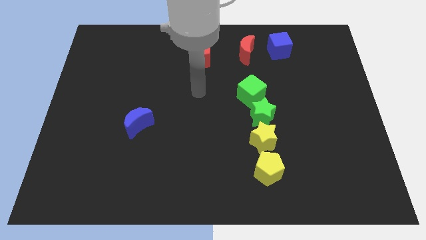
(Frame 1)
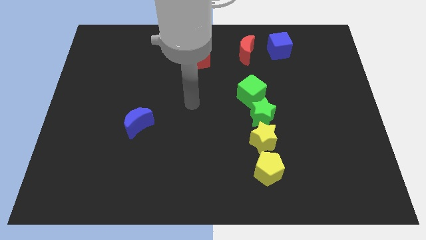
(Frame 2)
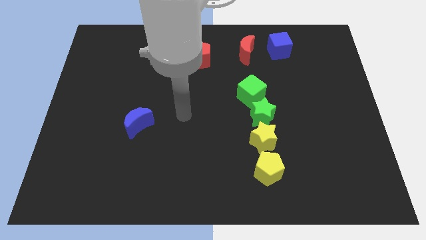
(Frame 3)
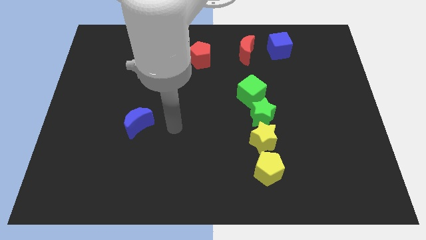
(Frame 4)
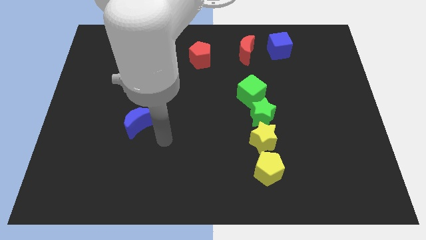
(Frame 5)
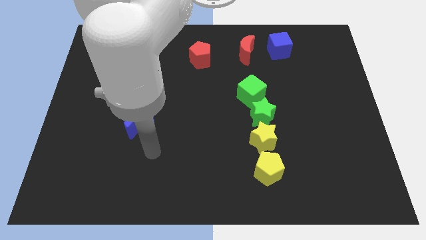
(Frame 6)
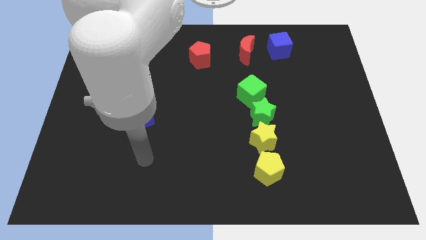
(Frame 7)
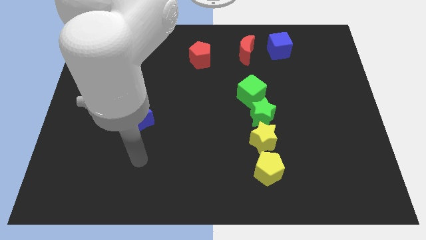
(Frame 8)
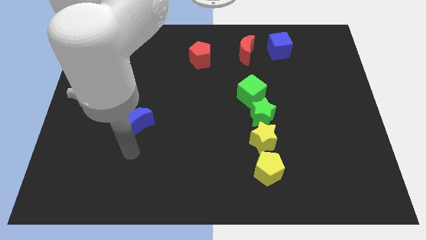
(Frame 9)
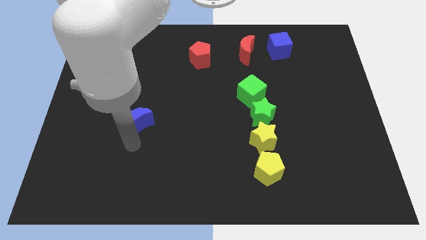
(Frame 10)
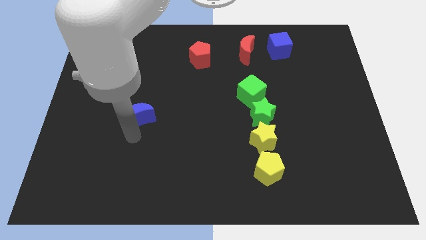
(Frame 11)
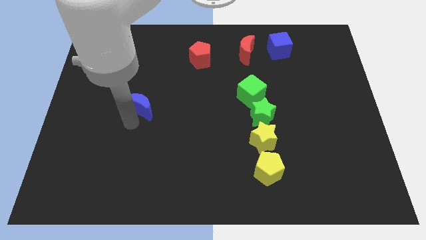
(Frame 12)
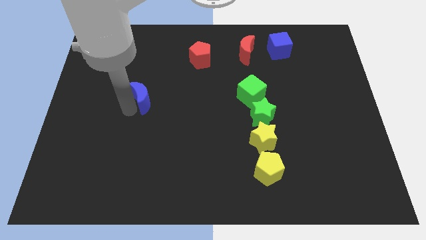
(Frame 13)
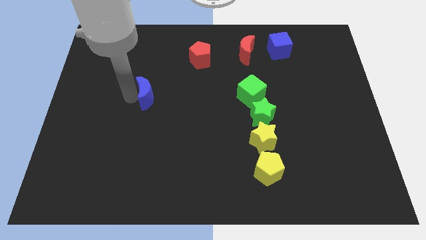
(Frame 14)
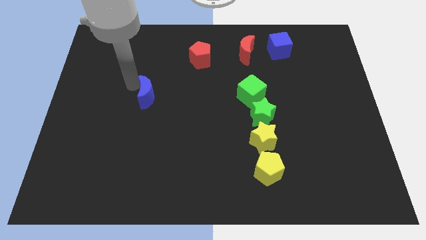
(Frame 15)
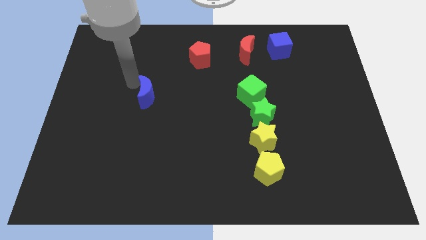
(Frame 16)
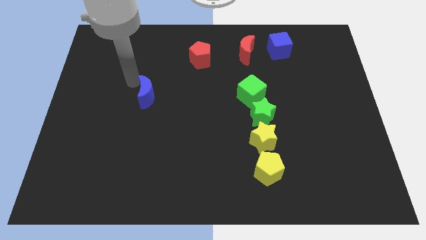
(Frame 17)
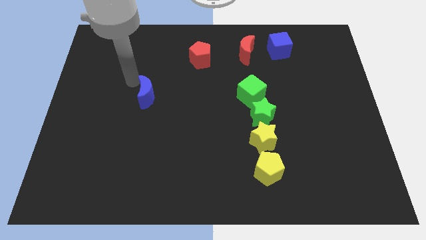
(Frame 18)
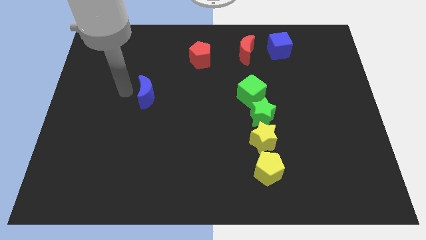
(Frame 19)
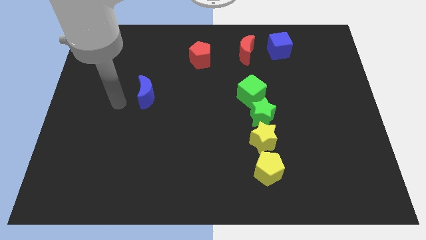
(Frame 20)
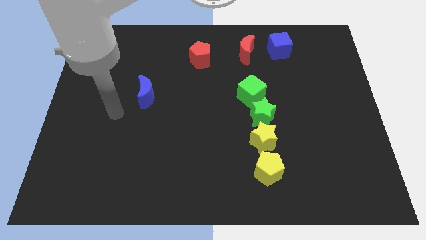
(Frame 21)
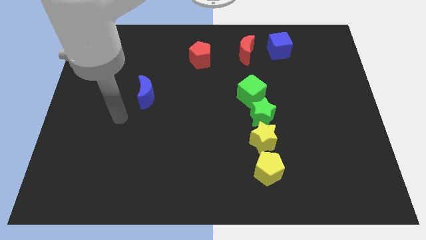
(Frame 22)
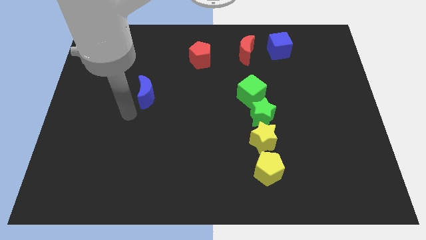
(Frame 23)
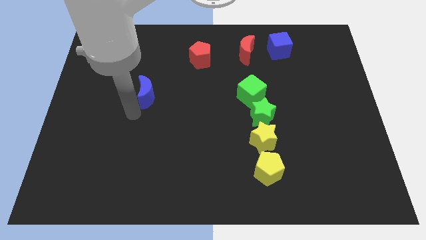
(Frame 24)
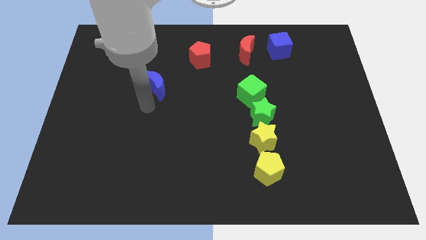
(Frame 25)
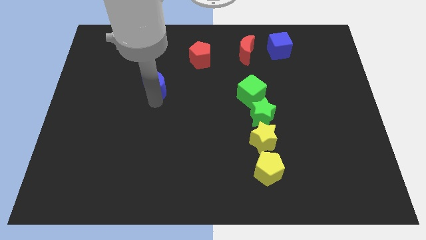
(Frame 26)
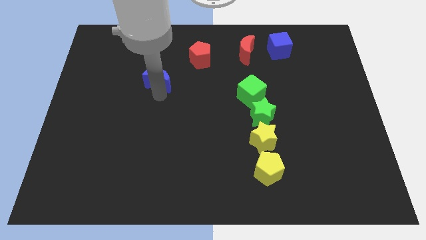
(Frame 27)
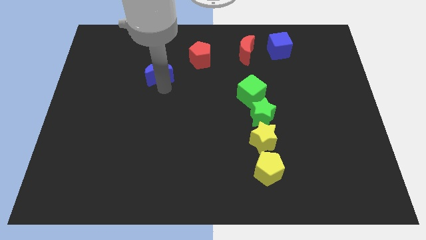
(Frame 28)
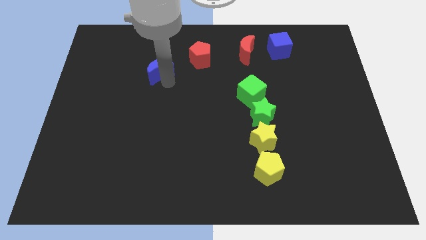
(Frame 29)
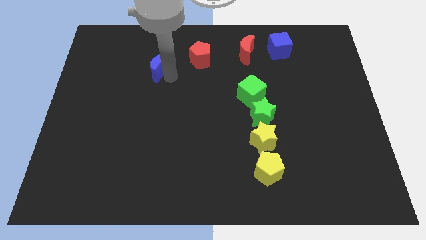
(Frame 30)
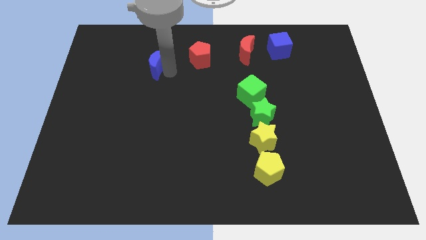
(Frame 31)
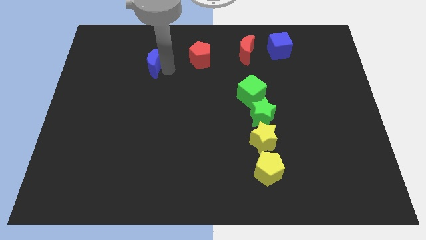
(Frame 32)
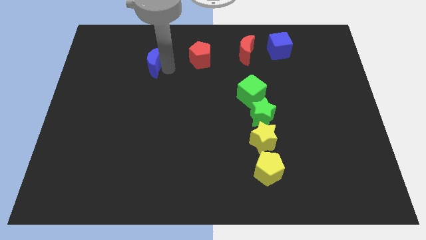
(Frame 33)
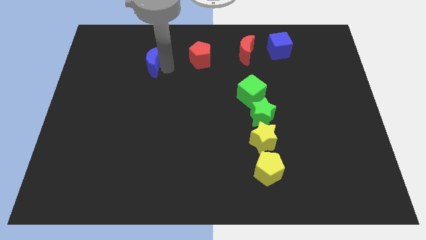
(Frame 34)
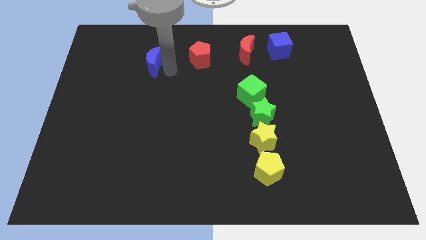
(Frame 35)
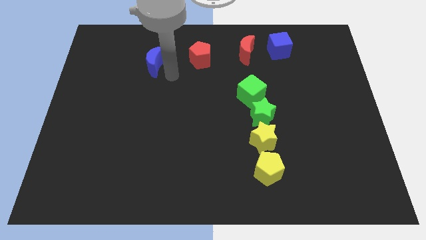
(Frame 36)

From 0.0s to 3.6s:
bring the blue moon at the left side of the red pentagon

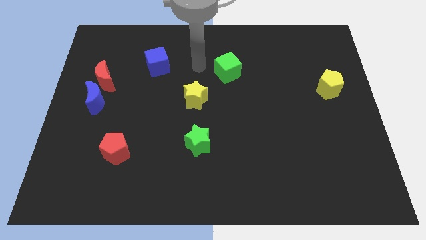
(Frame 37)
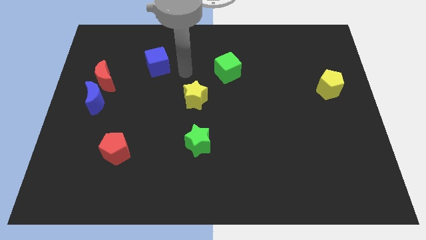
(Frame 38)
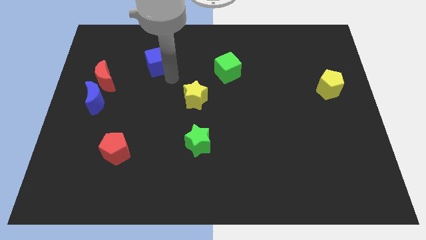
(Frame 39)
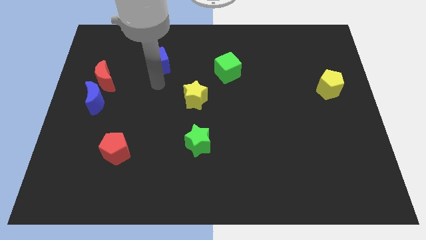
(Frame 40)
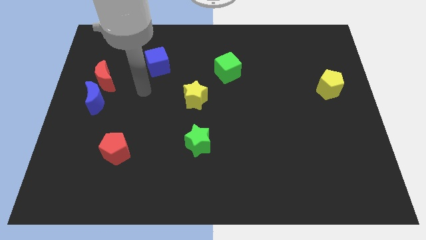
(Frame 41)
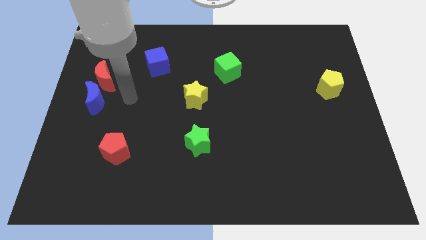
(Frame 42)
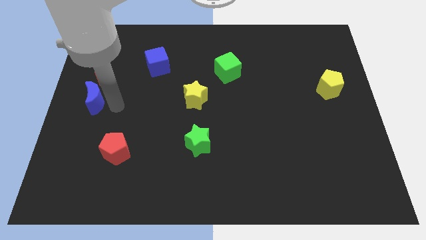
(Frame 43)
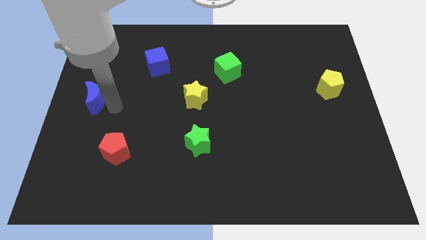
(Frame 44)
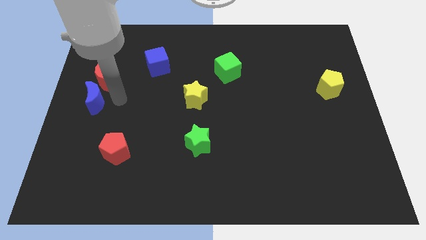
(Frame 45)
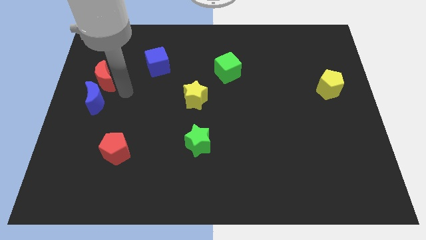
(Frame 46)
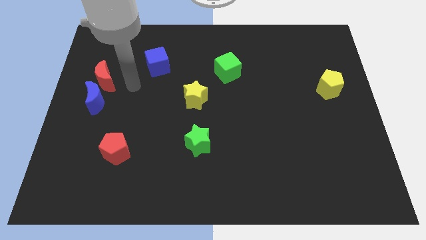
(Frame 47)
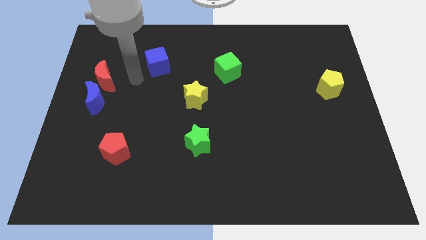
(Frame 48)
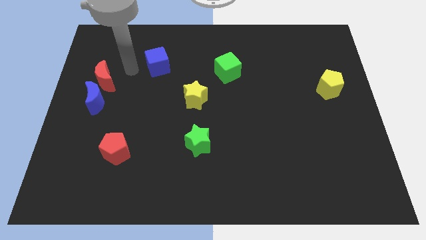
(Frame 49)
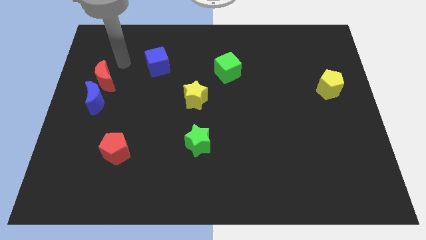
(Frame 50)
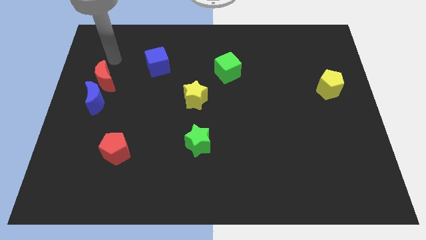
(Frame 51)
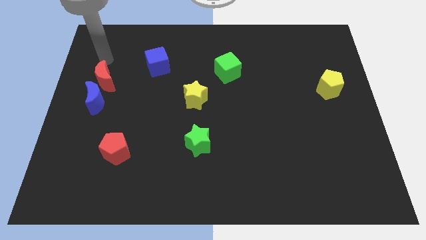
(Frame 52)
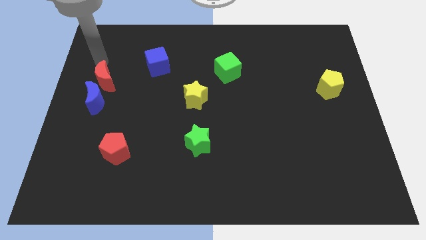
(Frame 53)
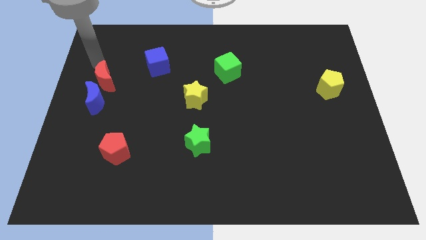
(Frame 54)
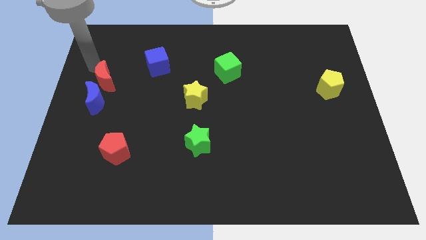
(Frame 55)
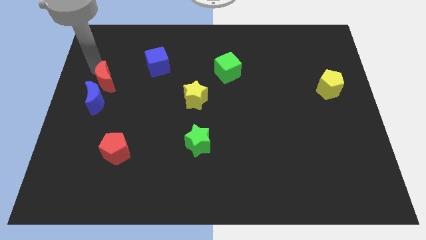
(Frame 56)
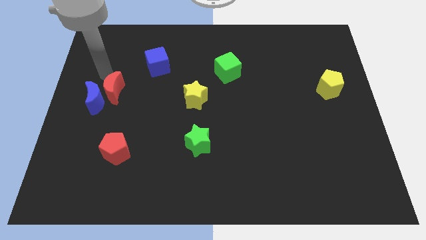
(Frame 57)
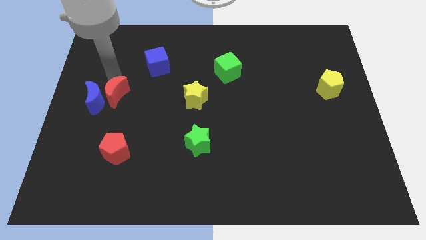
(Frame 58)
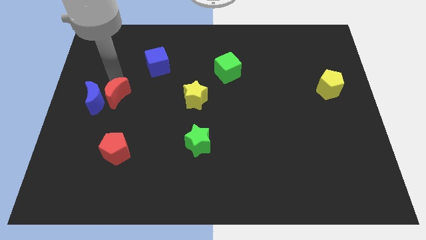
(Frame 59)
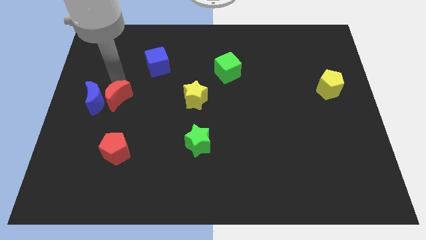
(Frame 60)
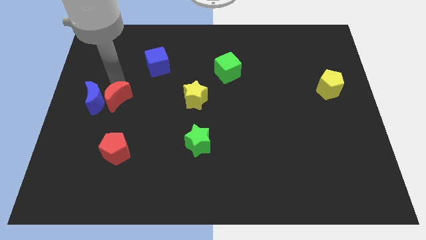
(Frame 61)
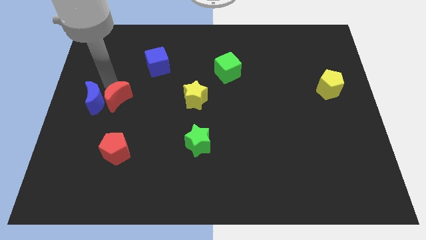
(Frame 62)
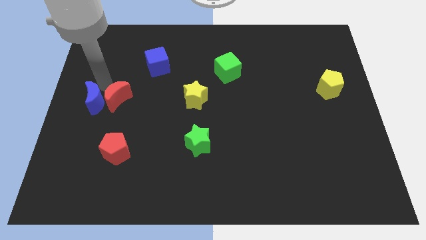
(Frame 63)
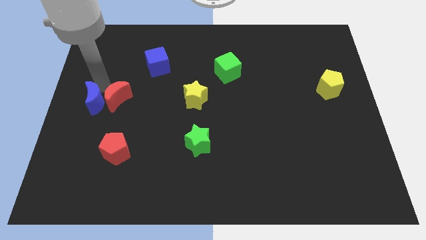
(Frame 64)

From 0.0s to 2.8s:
move the red pentagon to the right of the blue crescent

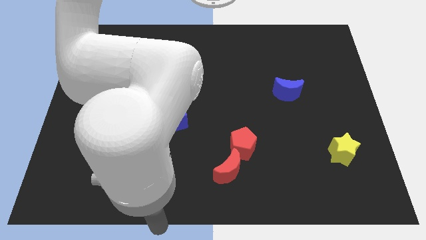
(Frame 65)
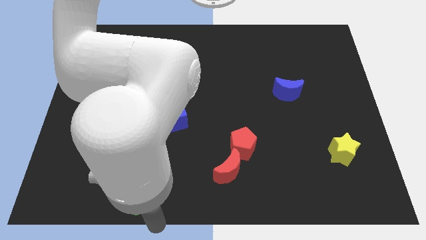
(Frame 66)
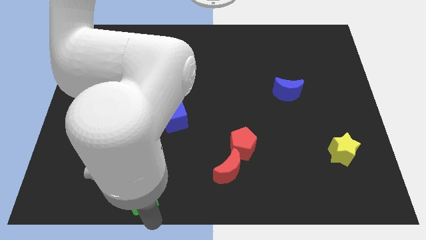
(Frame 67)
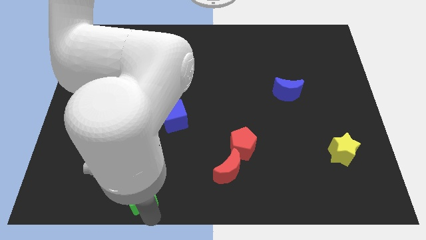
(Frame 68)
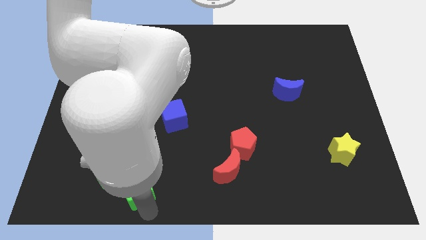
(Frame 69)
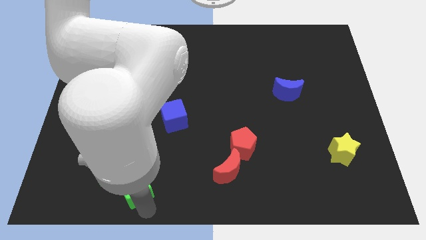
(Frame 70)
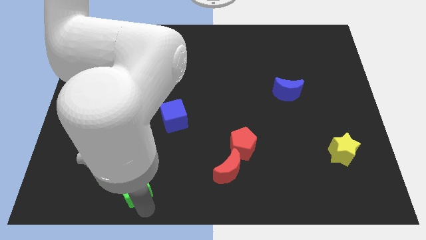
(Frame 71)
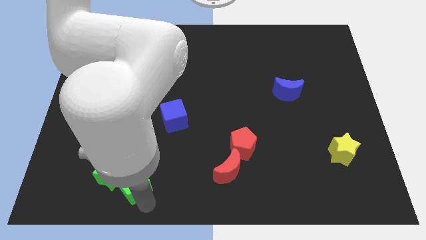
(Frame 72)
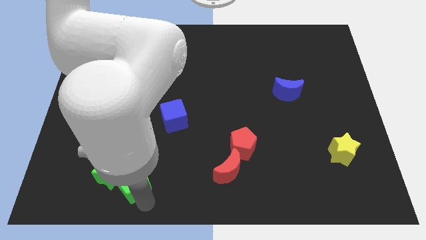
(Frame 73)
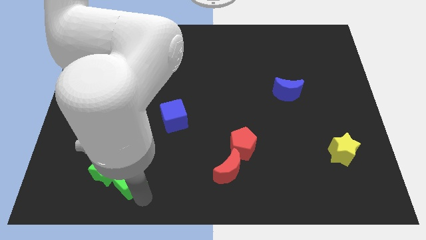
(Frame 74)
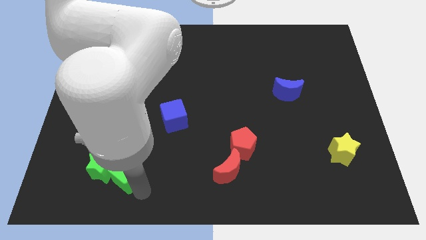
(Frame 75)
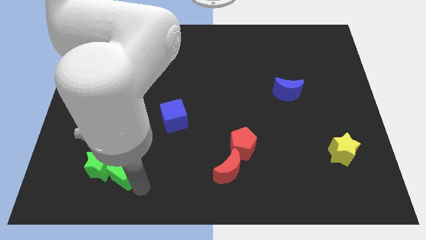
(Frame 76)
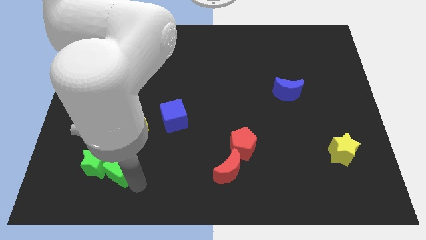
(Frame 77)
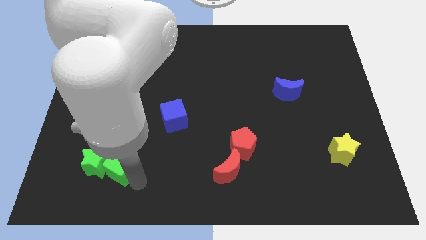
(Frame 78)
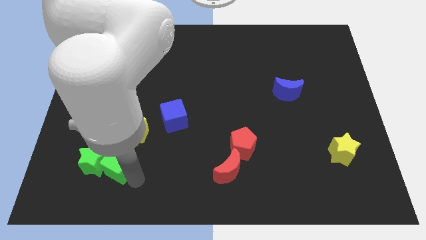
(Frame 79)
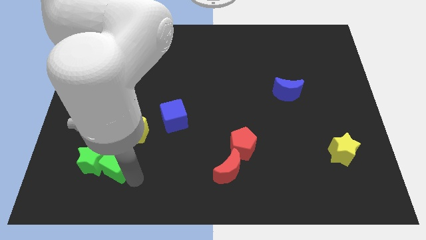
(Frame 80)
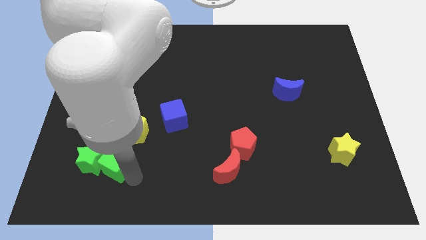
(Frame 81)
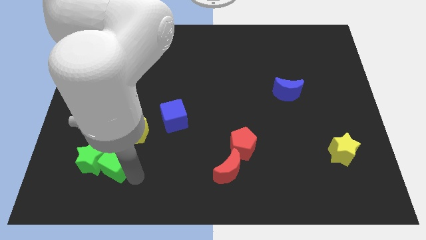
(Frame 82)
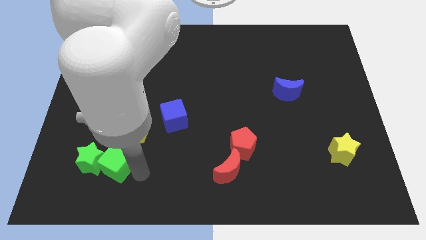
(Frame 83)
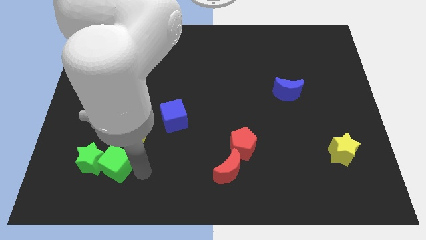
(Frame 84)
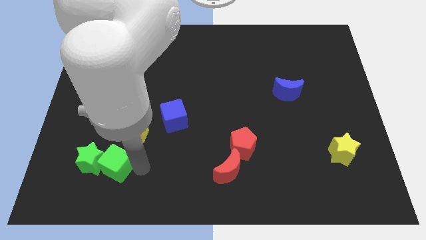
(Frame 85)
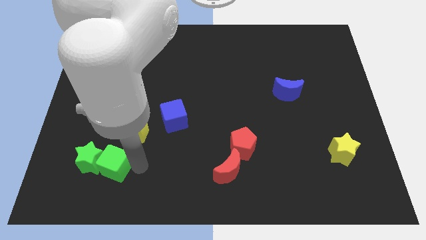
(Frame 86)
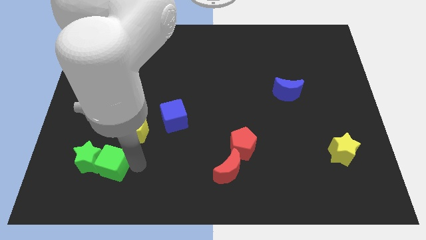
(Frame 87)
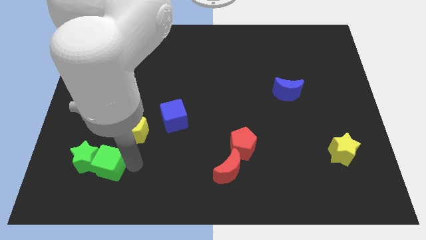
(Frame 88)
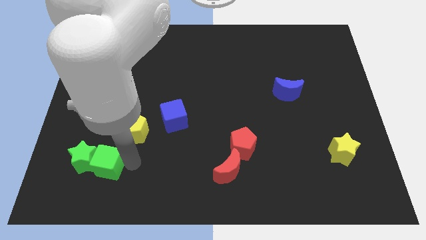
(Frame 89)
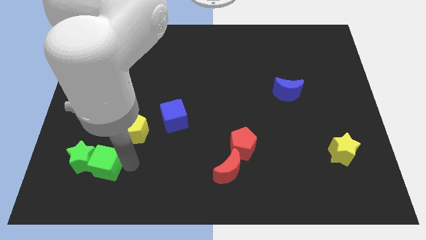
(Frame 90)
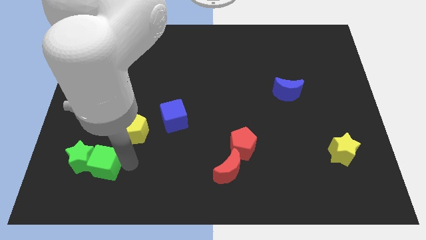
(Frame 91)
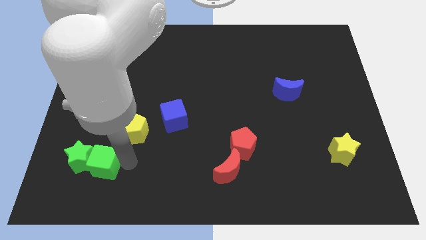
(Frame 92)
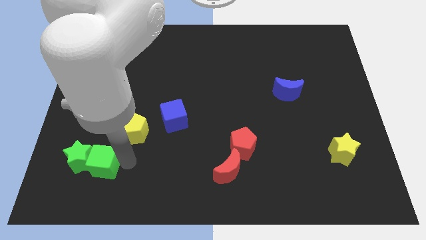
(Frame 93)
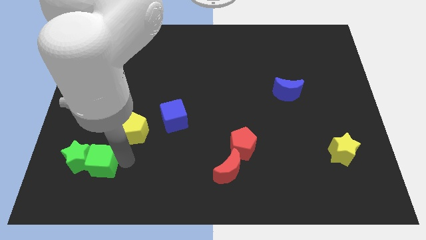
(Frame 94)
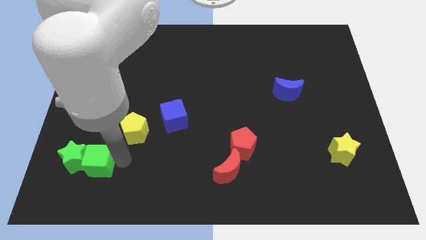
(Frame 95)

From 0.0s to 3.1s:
push the green cube and green star towards the center left
